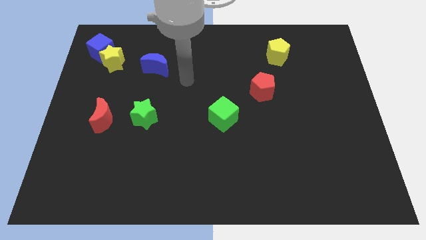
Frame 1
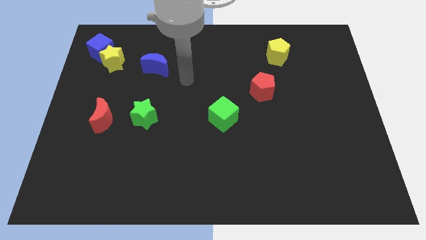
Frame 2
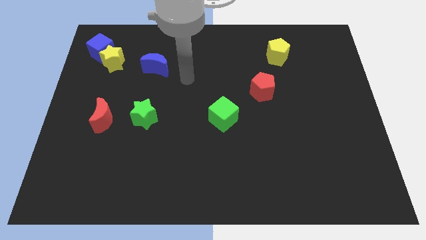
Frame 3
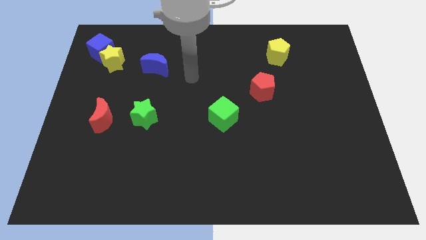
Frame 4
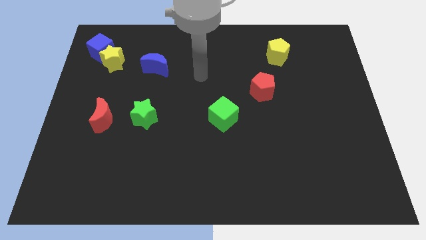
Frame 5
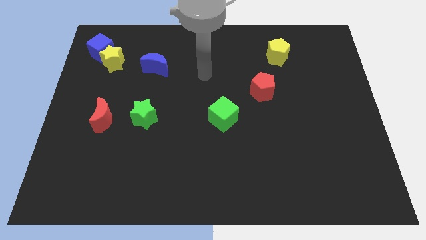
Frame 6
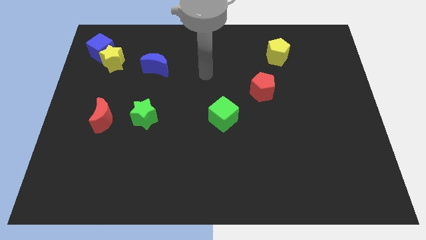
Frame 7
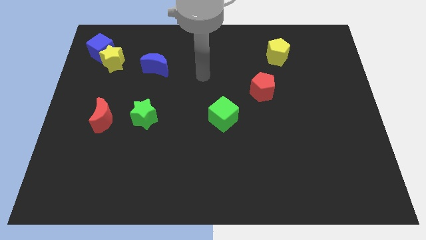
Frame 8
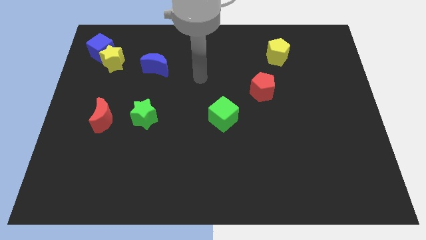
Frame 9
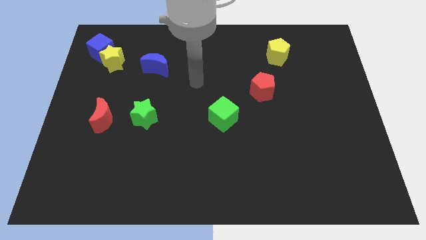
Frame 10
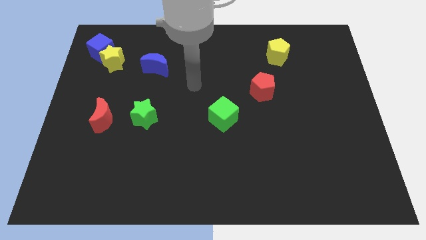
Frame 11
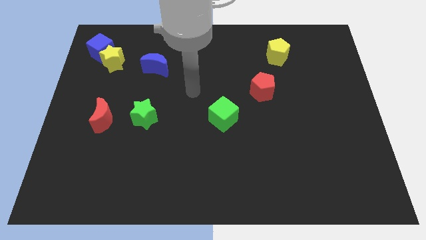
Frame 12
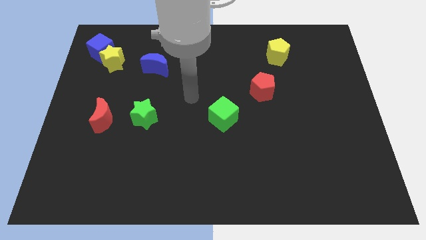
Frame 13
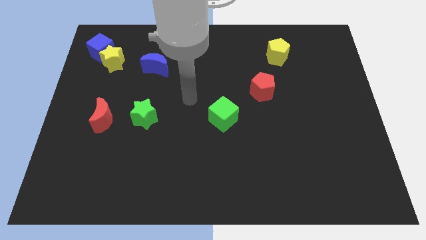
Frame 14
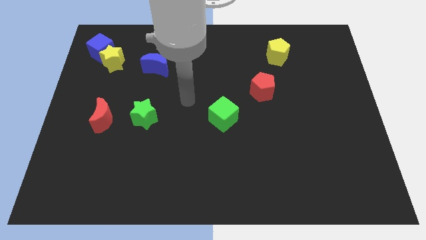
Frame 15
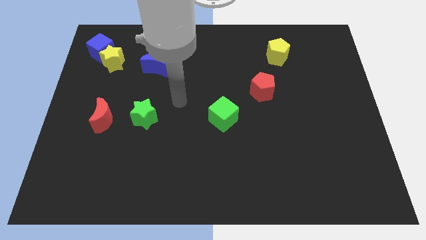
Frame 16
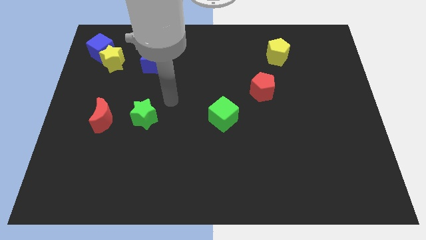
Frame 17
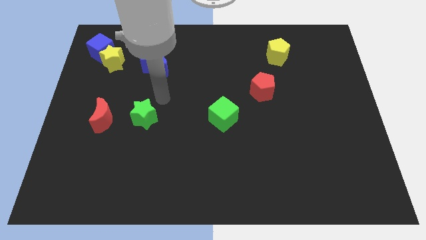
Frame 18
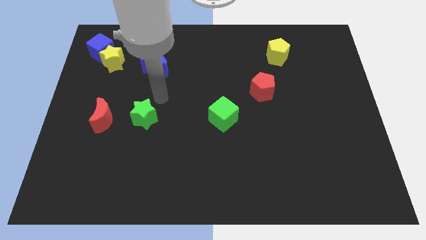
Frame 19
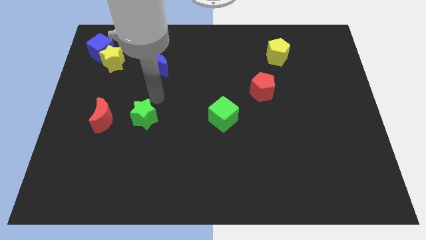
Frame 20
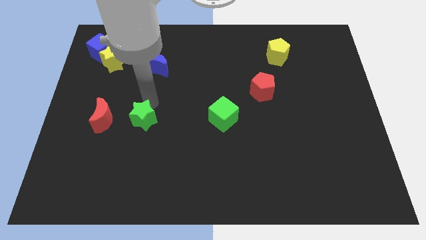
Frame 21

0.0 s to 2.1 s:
move your arm to the top of green star

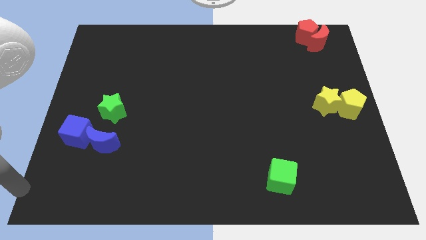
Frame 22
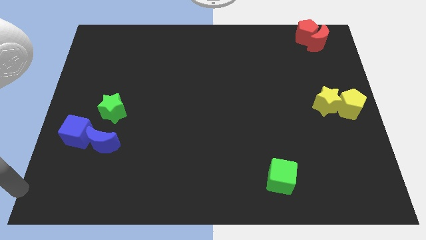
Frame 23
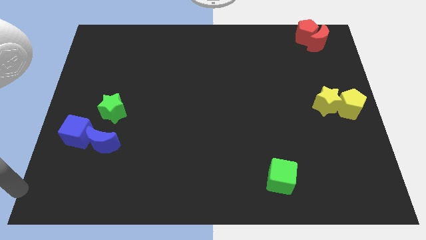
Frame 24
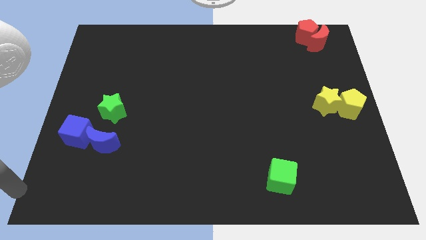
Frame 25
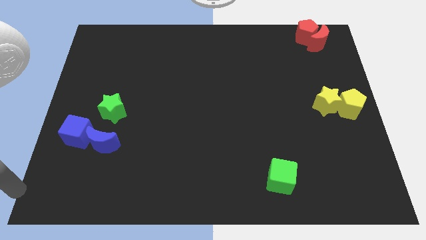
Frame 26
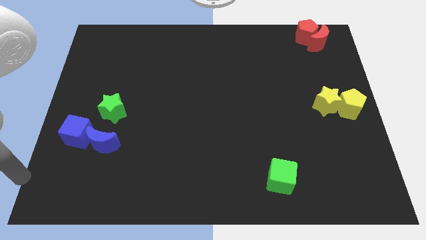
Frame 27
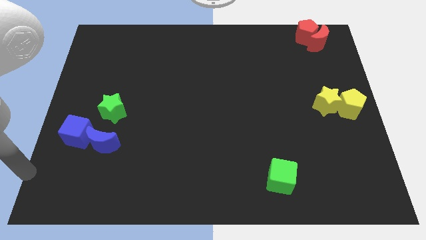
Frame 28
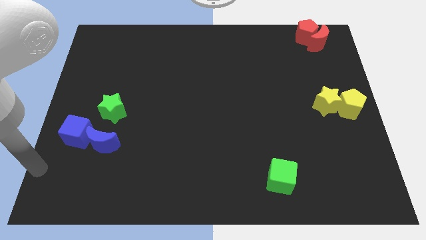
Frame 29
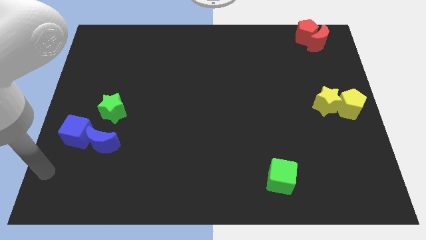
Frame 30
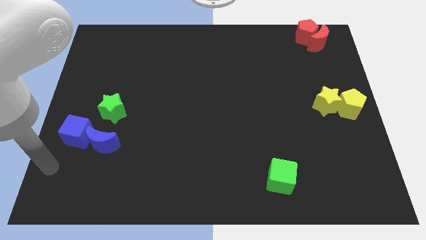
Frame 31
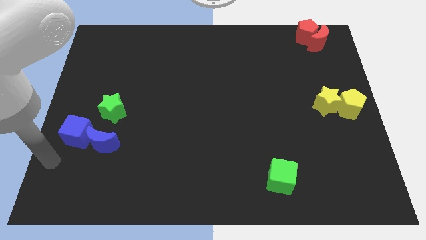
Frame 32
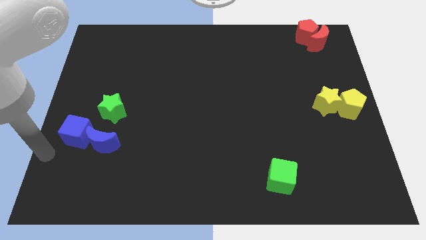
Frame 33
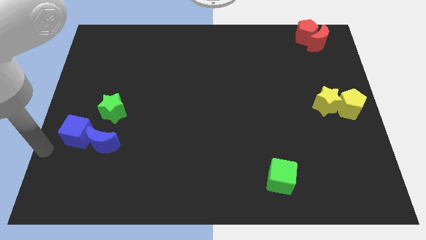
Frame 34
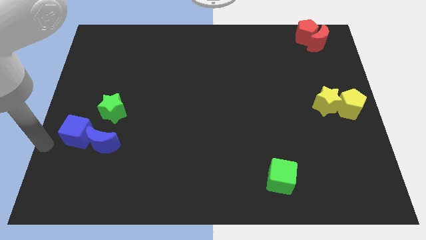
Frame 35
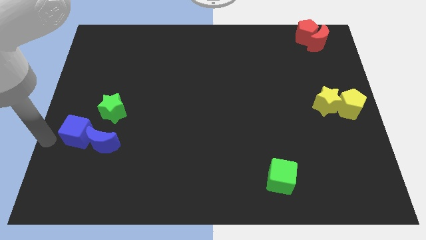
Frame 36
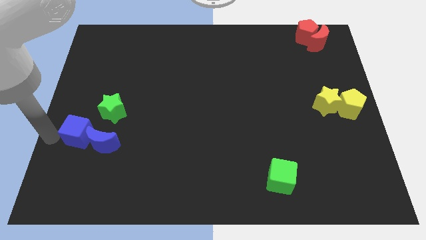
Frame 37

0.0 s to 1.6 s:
move the arm towards the left to the blue cube

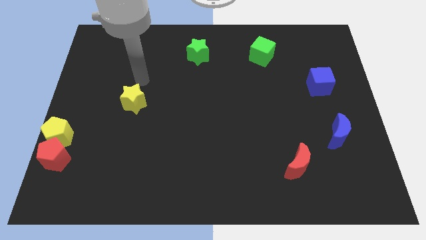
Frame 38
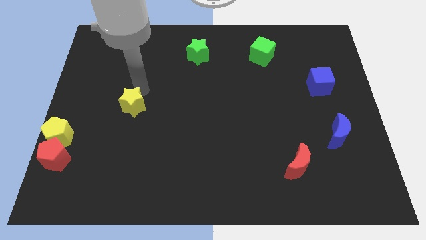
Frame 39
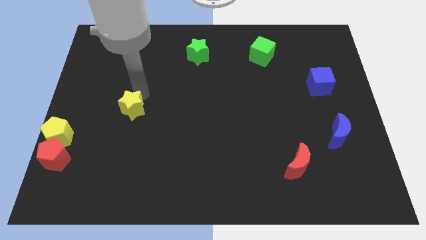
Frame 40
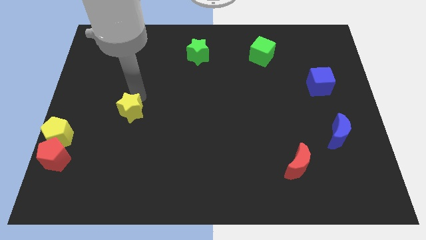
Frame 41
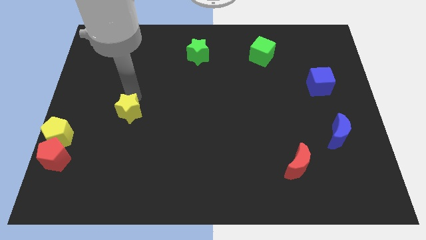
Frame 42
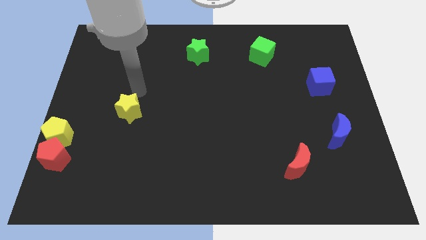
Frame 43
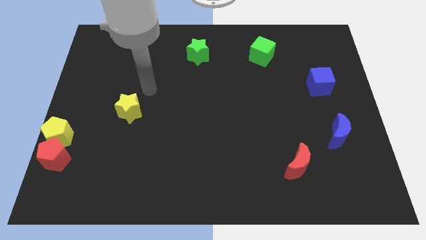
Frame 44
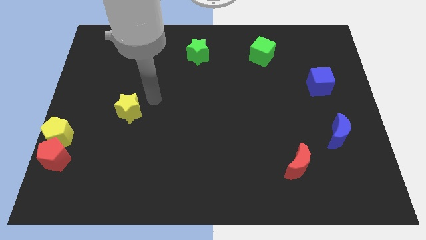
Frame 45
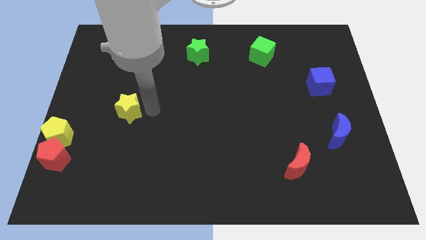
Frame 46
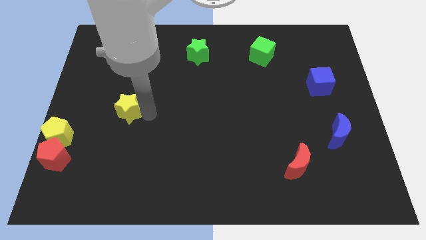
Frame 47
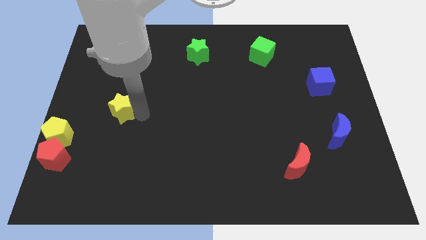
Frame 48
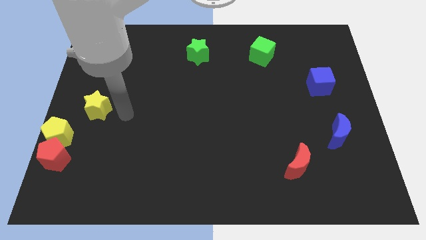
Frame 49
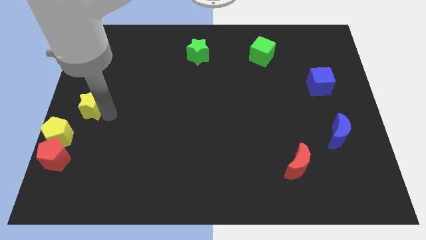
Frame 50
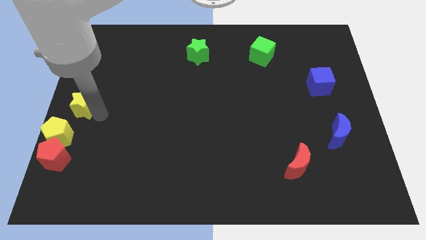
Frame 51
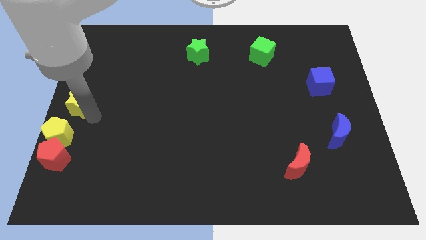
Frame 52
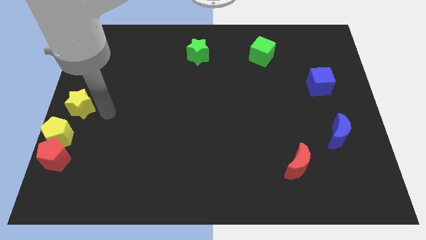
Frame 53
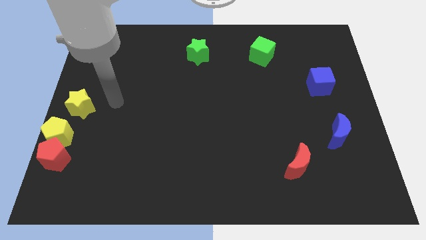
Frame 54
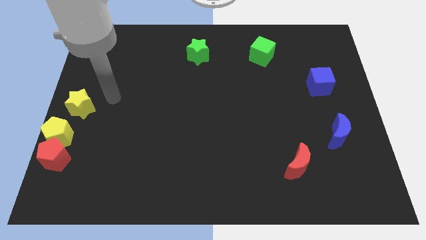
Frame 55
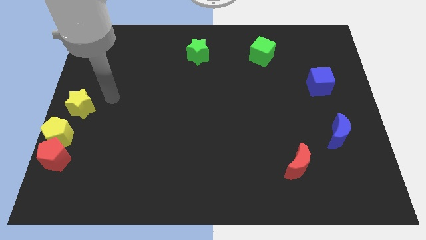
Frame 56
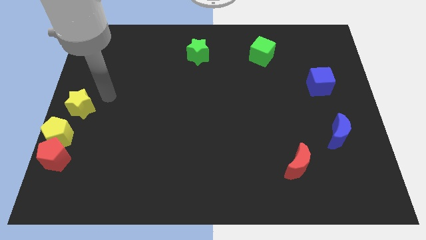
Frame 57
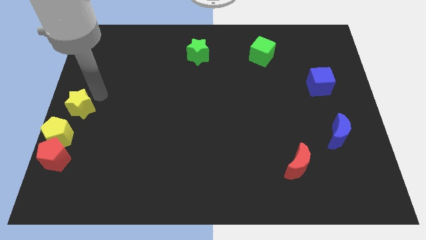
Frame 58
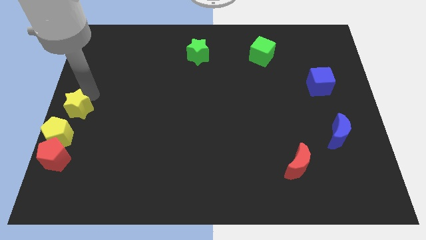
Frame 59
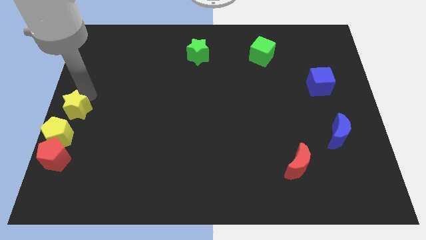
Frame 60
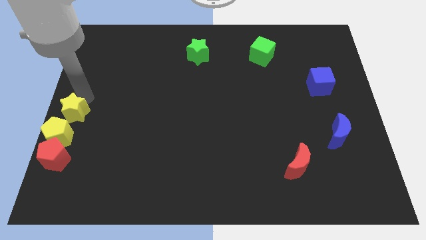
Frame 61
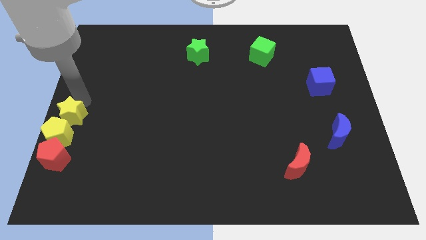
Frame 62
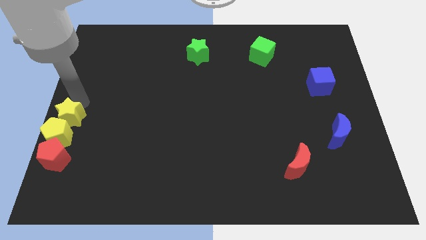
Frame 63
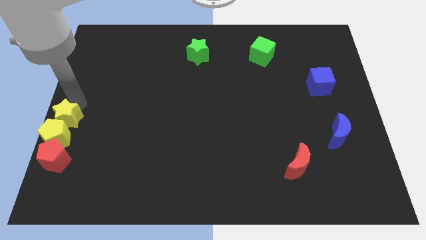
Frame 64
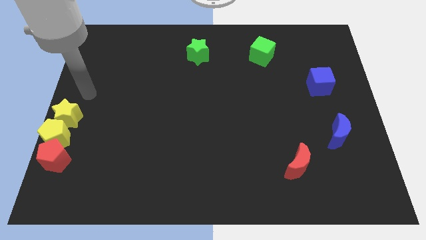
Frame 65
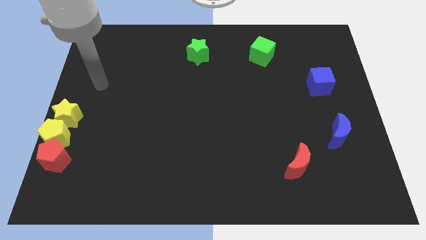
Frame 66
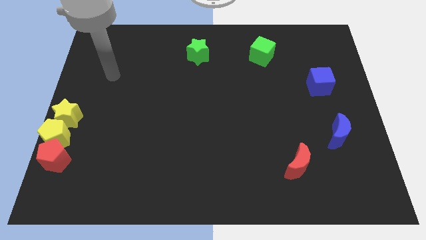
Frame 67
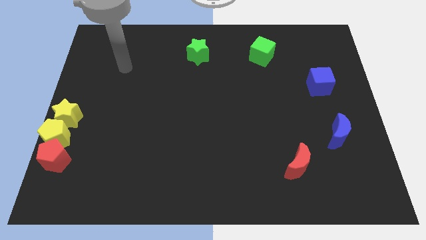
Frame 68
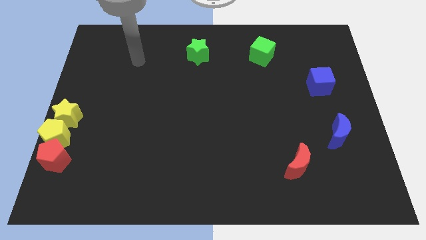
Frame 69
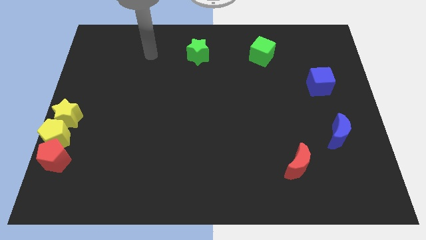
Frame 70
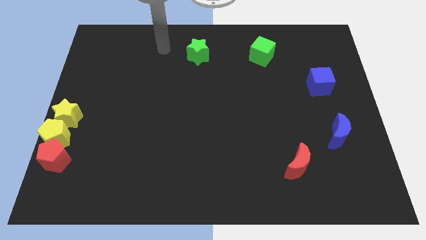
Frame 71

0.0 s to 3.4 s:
move the yellow star into the red pentagon and the yellow pentagon

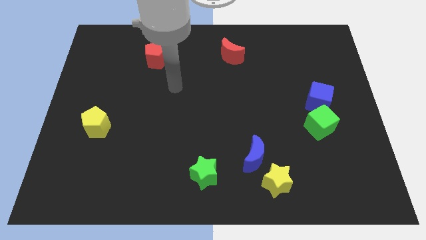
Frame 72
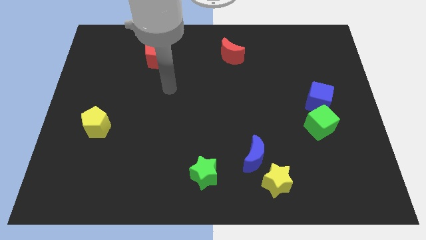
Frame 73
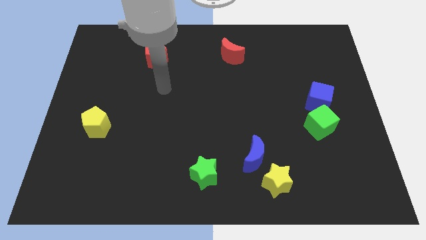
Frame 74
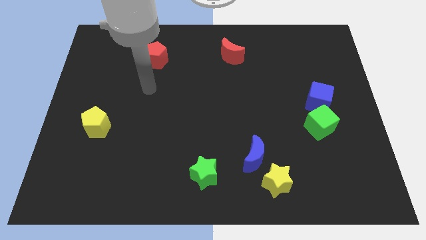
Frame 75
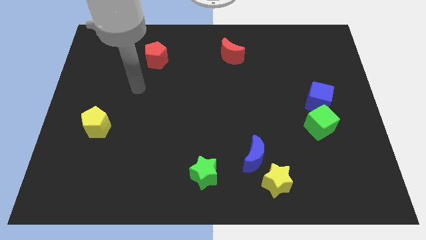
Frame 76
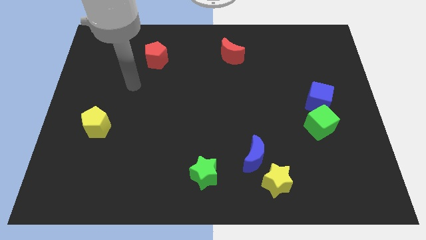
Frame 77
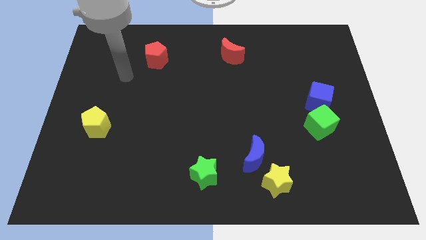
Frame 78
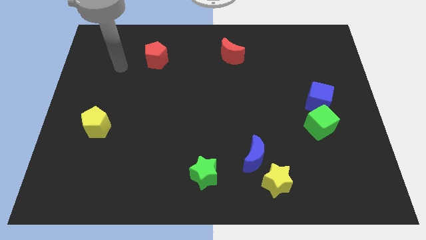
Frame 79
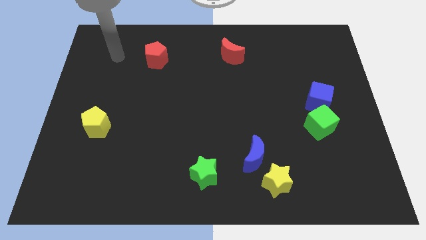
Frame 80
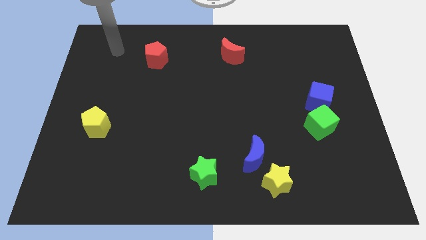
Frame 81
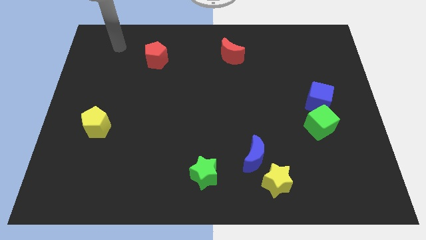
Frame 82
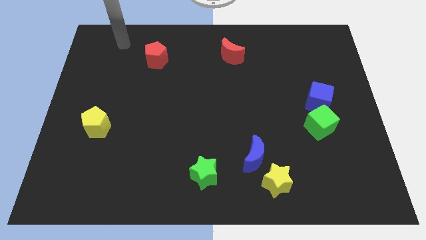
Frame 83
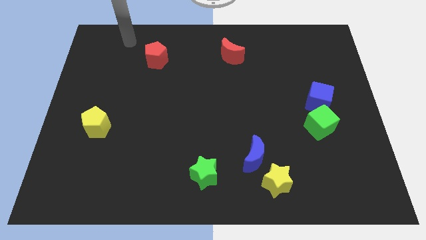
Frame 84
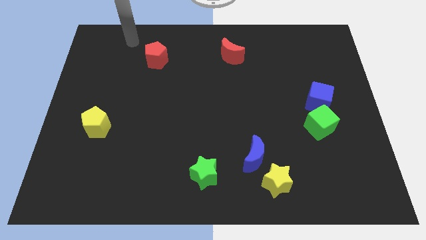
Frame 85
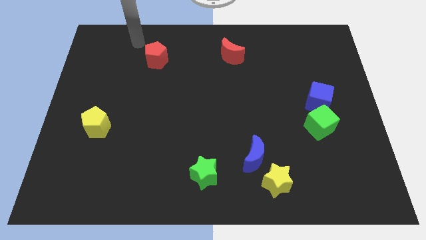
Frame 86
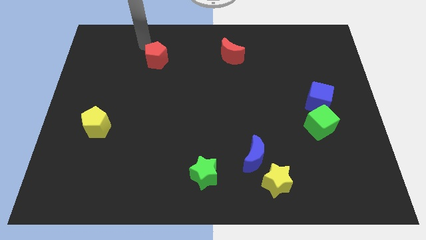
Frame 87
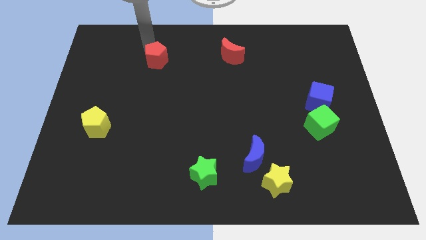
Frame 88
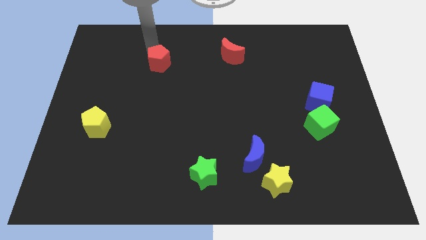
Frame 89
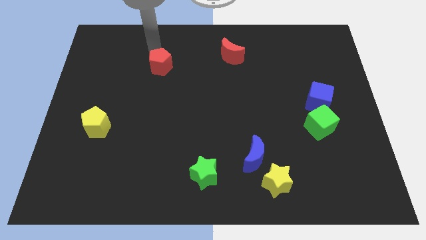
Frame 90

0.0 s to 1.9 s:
move the red pentagon slightly to the bottom of the board

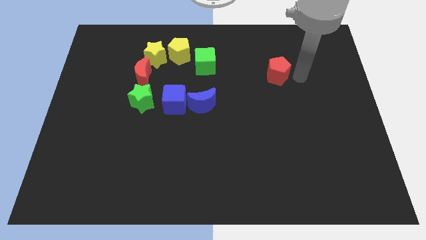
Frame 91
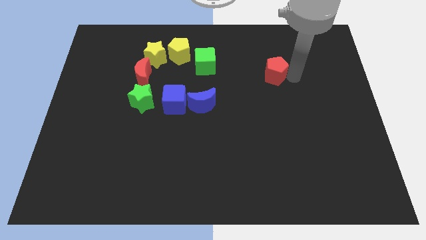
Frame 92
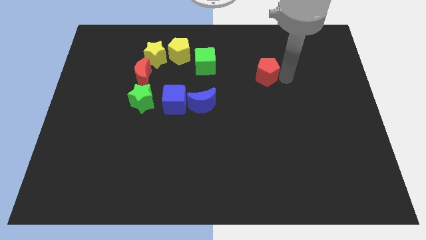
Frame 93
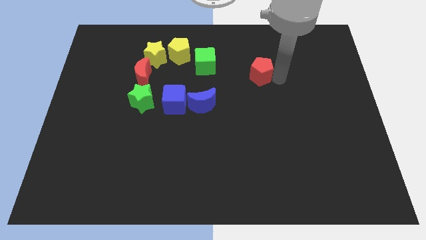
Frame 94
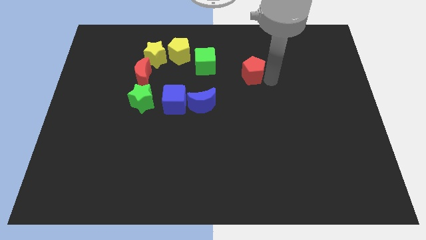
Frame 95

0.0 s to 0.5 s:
move the red pentagon right to the green cube
